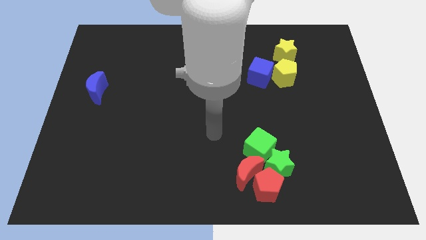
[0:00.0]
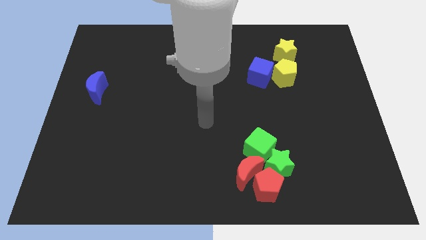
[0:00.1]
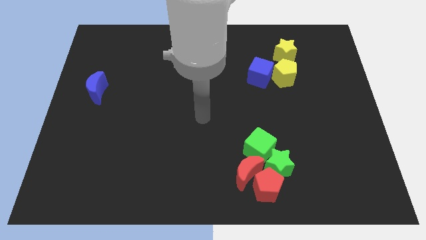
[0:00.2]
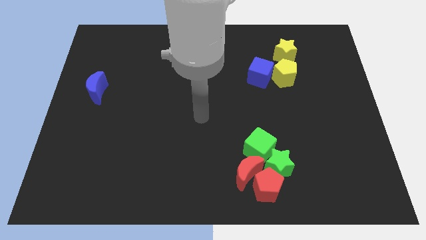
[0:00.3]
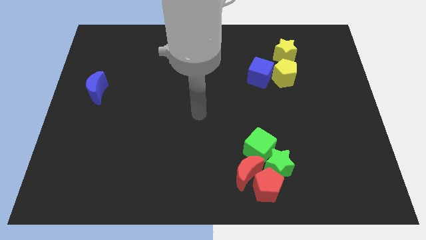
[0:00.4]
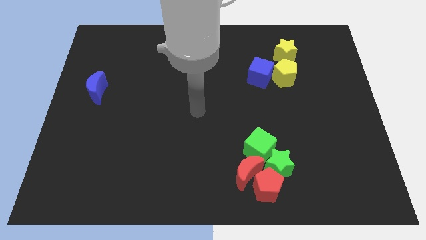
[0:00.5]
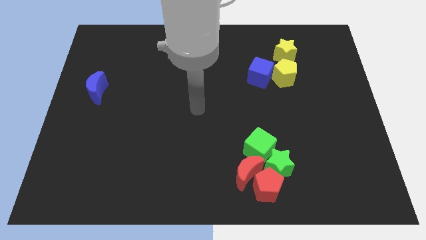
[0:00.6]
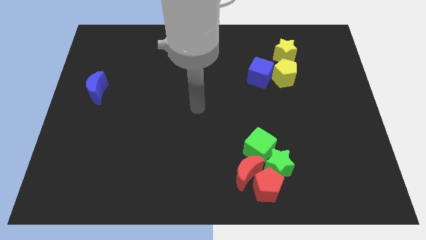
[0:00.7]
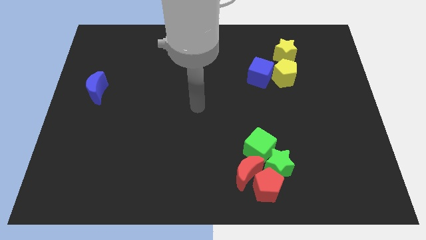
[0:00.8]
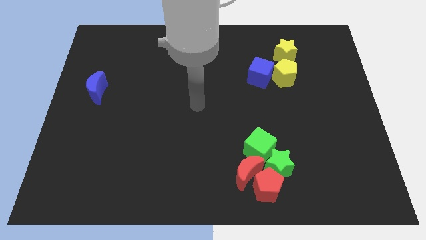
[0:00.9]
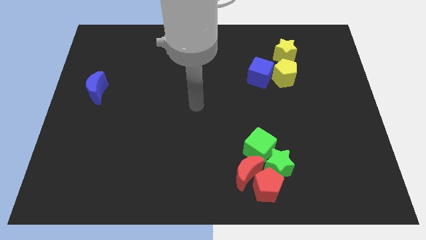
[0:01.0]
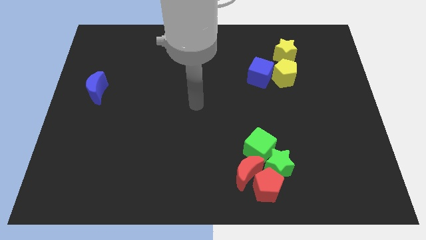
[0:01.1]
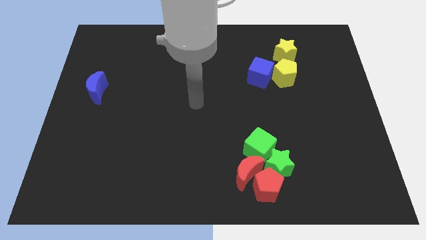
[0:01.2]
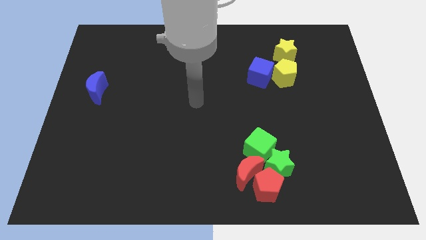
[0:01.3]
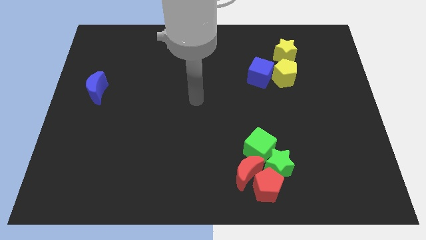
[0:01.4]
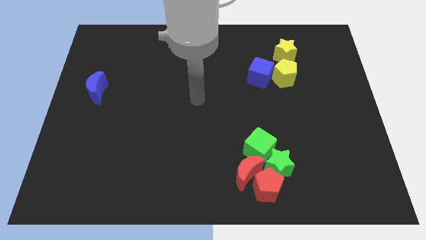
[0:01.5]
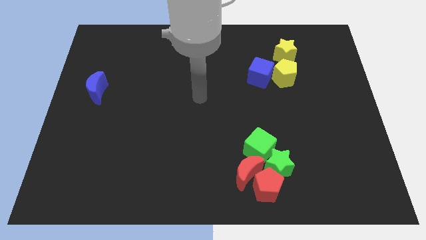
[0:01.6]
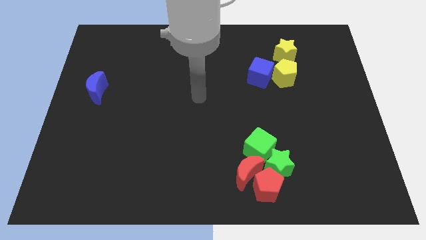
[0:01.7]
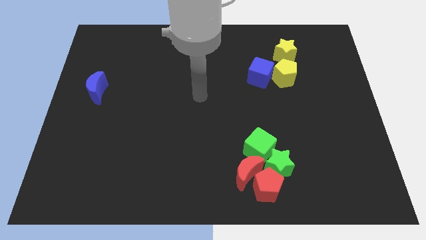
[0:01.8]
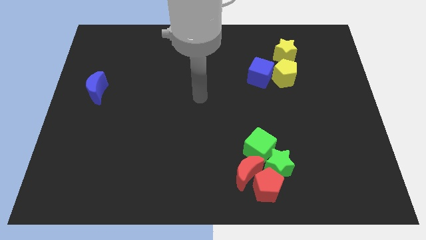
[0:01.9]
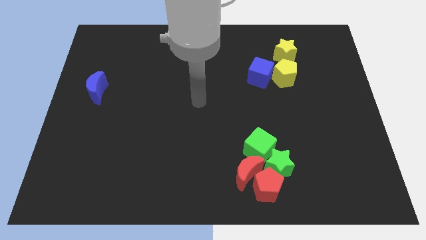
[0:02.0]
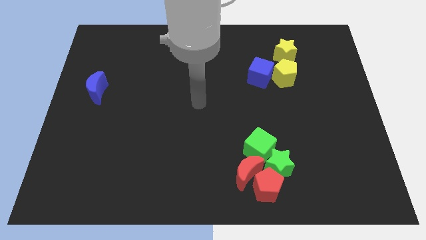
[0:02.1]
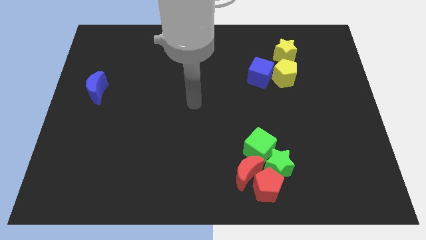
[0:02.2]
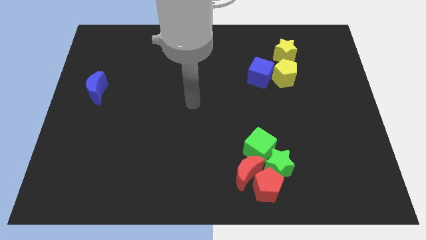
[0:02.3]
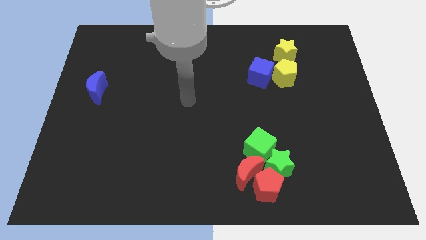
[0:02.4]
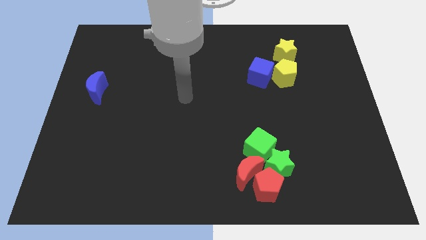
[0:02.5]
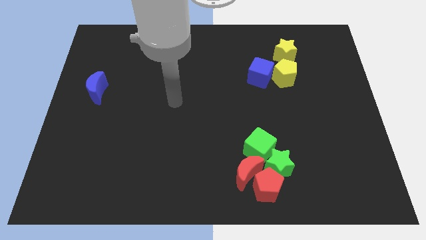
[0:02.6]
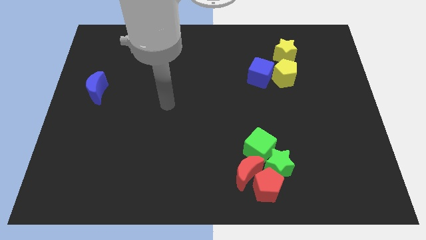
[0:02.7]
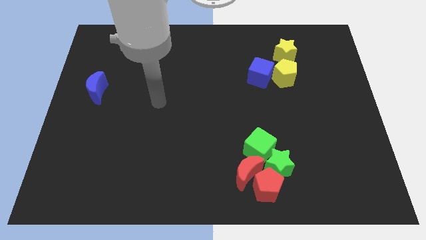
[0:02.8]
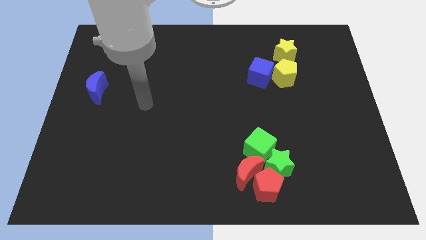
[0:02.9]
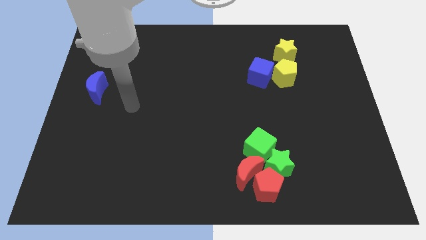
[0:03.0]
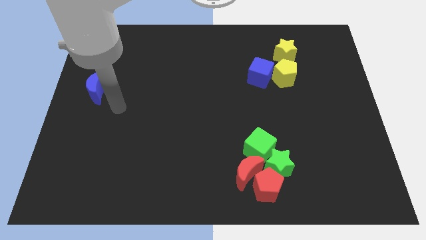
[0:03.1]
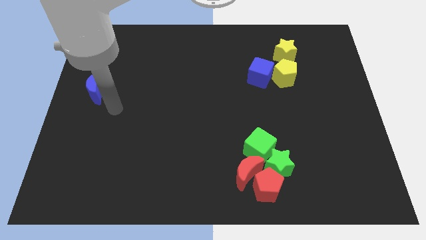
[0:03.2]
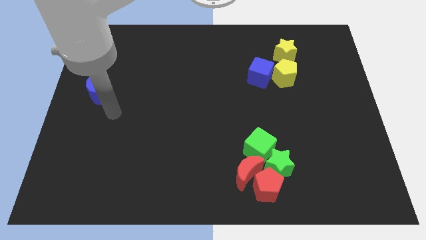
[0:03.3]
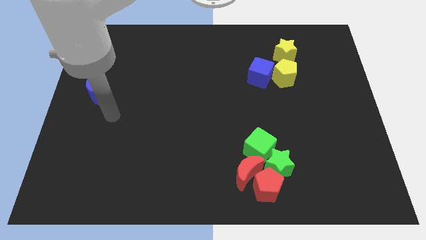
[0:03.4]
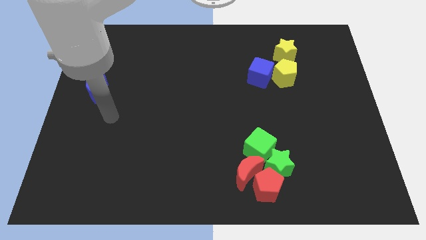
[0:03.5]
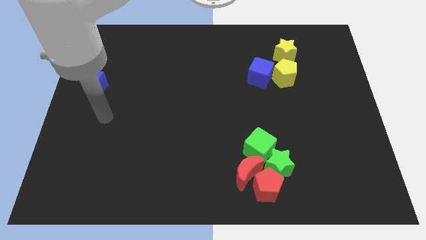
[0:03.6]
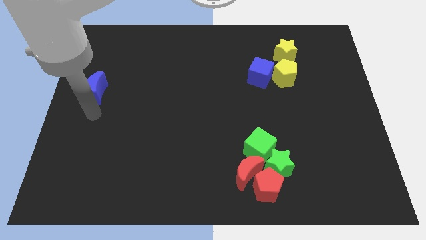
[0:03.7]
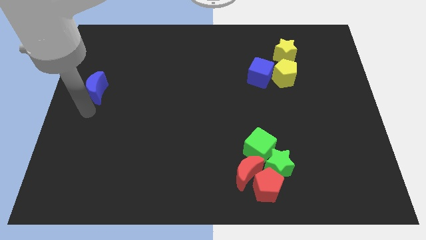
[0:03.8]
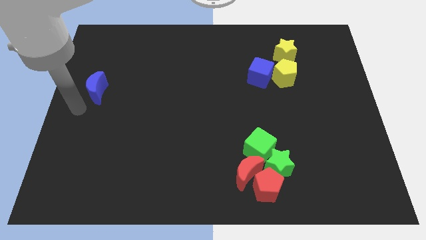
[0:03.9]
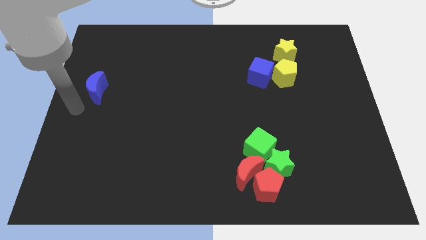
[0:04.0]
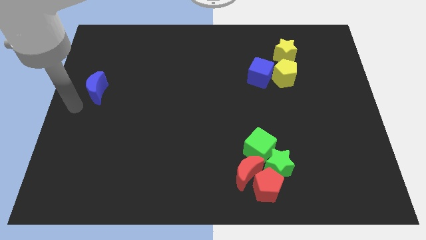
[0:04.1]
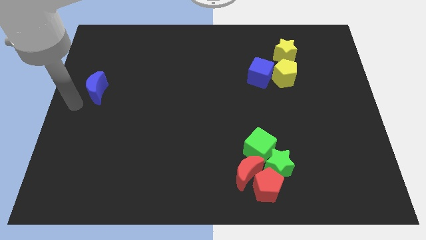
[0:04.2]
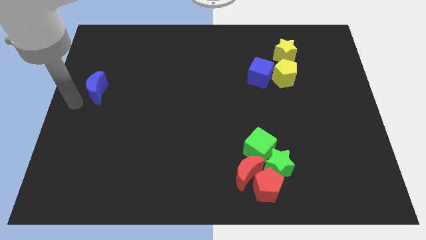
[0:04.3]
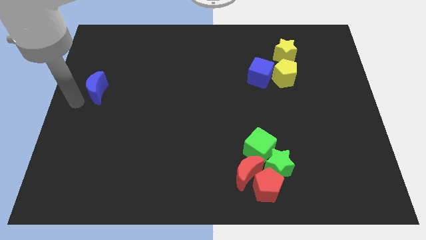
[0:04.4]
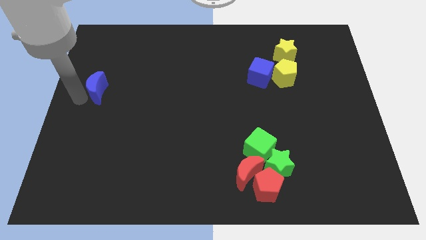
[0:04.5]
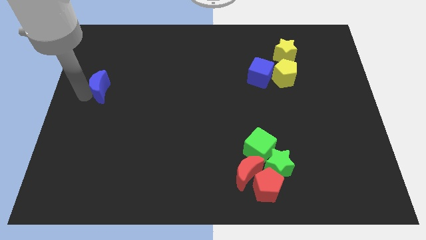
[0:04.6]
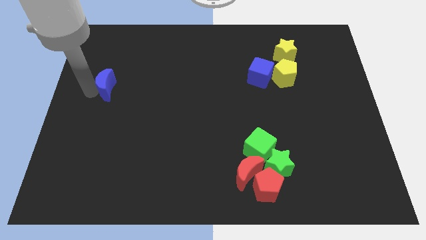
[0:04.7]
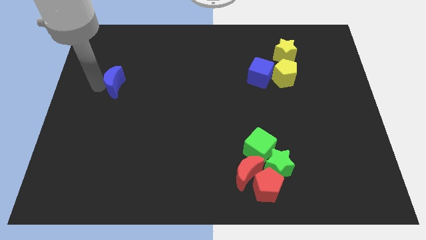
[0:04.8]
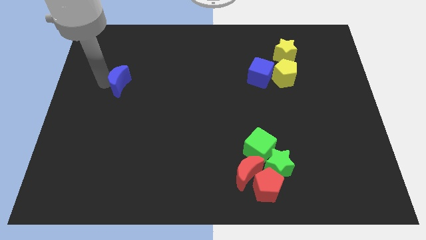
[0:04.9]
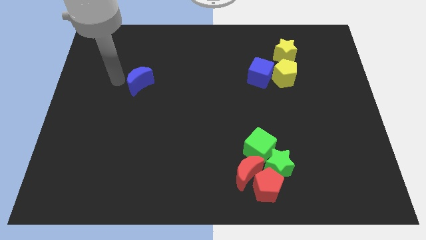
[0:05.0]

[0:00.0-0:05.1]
push the blue crescent slightly to the right of the board

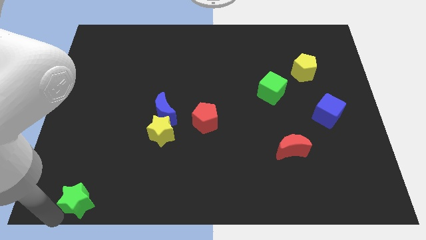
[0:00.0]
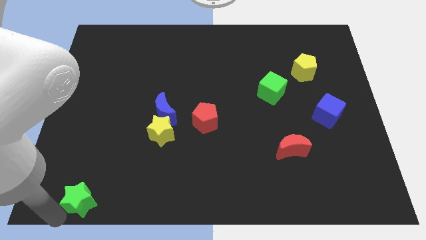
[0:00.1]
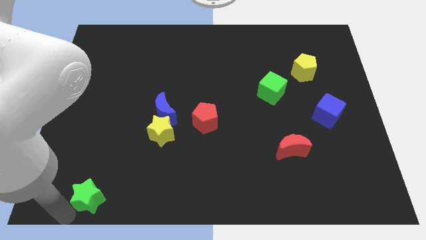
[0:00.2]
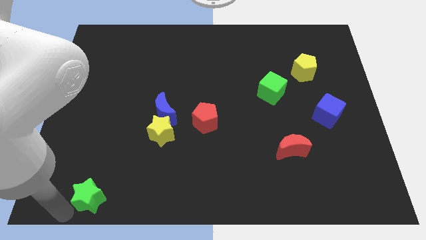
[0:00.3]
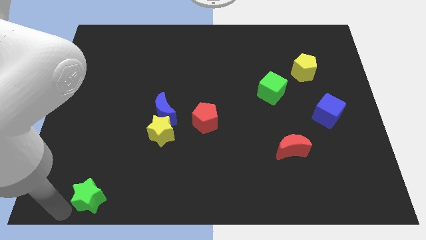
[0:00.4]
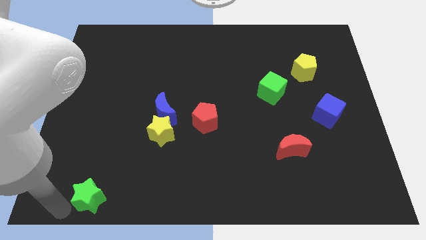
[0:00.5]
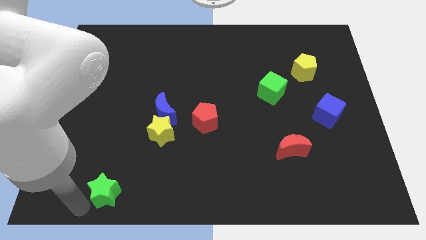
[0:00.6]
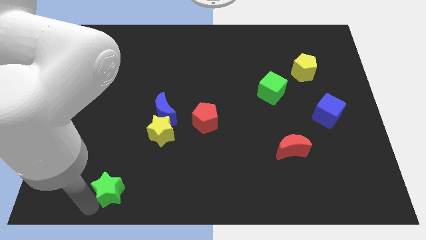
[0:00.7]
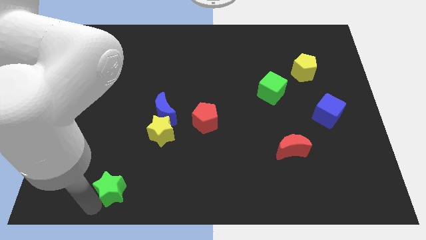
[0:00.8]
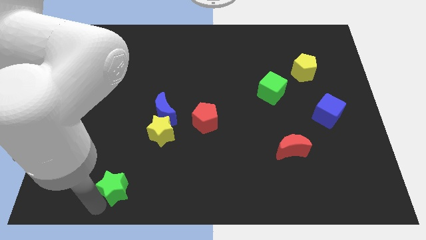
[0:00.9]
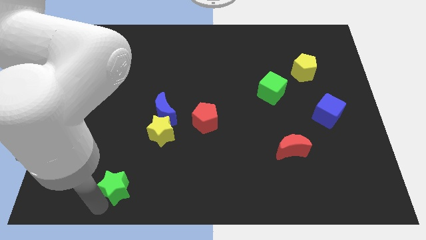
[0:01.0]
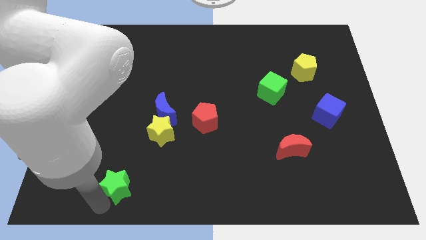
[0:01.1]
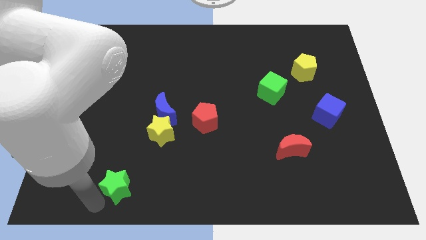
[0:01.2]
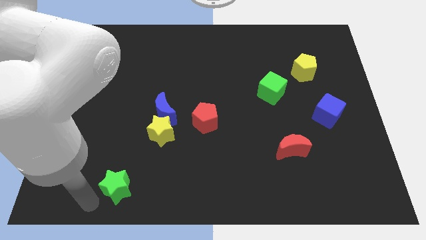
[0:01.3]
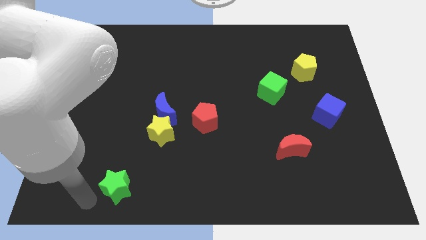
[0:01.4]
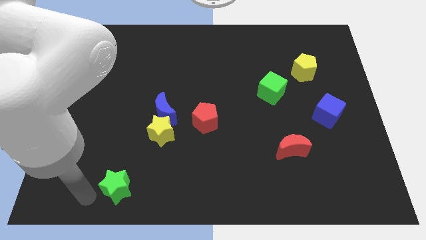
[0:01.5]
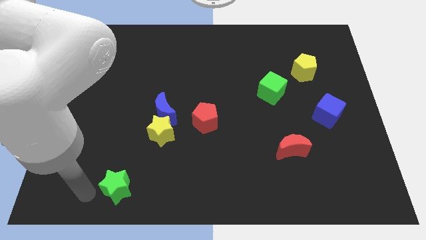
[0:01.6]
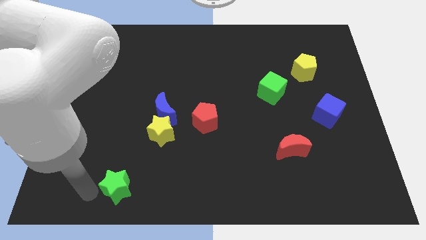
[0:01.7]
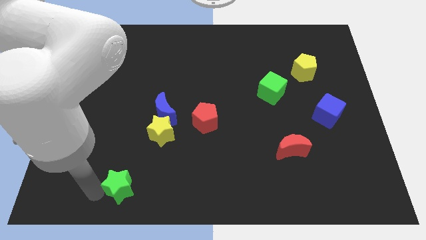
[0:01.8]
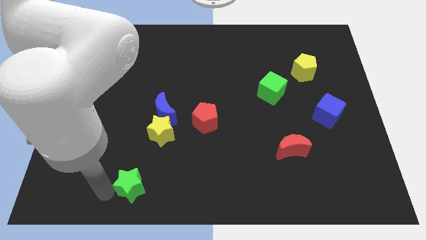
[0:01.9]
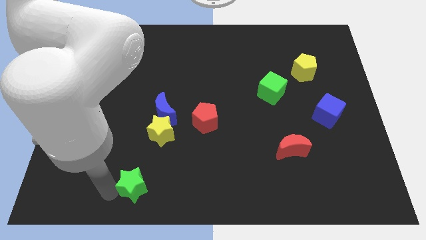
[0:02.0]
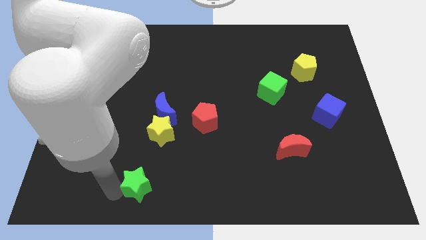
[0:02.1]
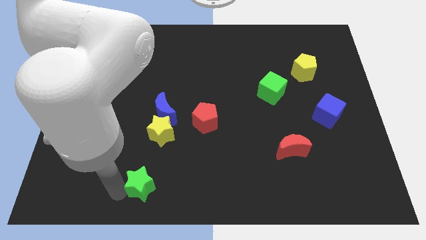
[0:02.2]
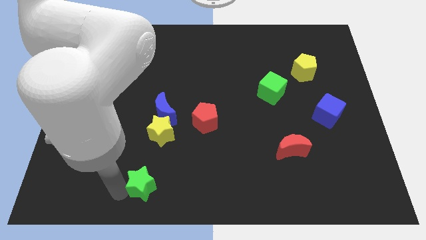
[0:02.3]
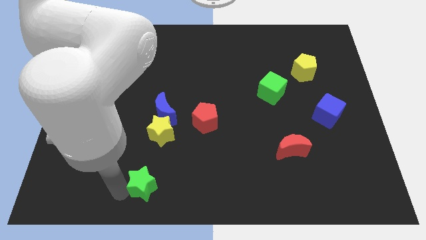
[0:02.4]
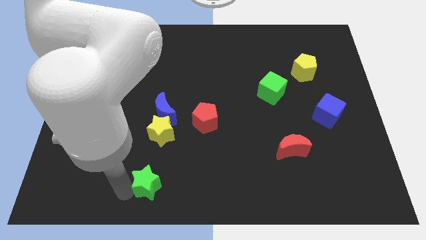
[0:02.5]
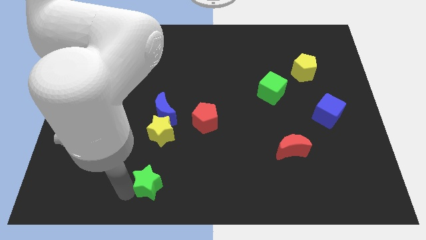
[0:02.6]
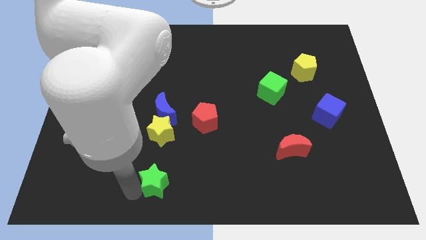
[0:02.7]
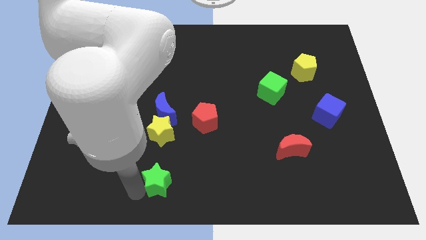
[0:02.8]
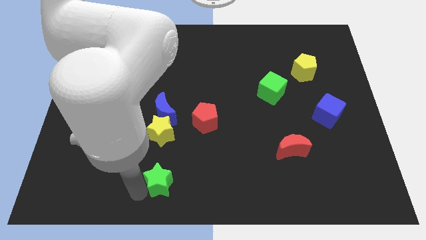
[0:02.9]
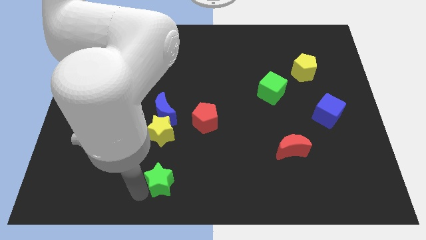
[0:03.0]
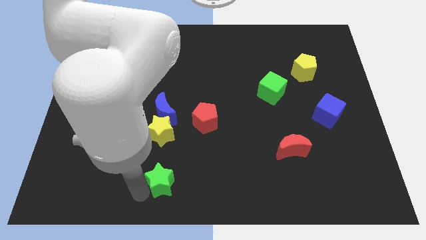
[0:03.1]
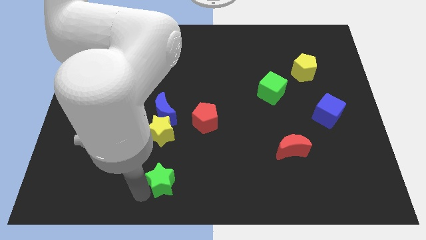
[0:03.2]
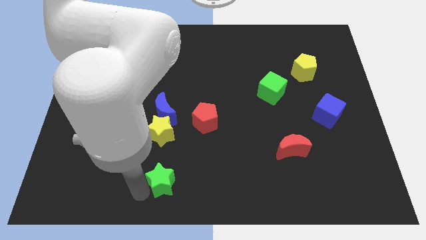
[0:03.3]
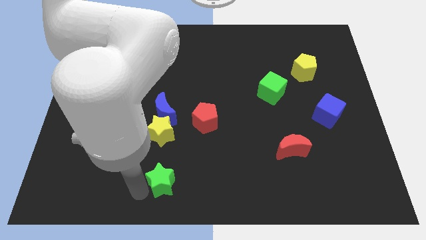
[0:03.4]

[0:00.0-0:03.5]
put the green star below the yellow star

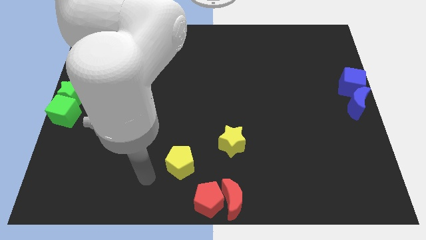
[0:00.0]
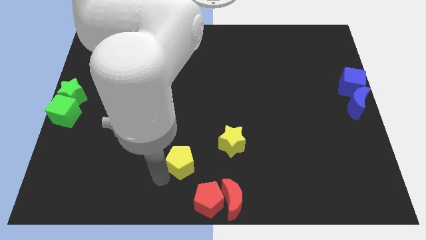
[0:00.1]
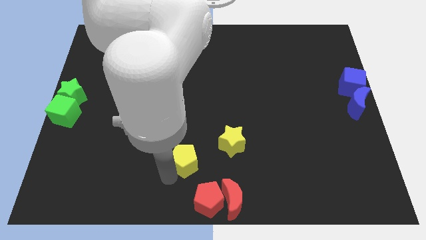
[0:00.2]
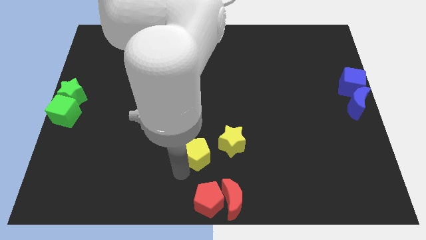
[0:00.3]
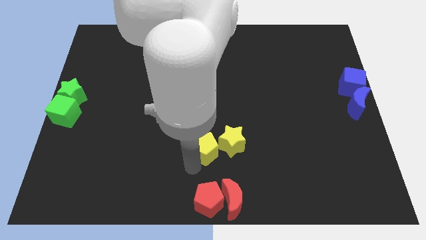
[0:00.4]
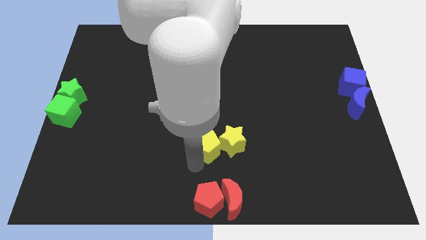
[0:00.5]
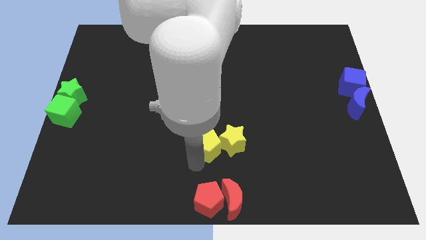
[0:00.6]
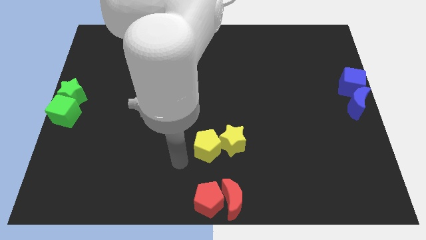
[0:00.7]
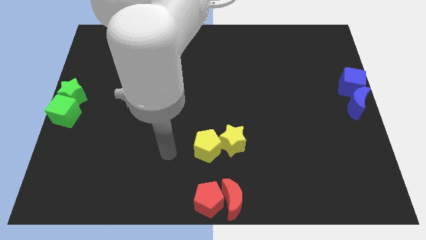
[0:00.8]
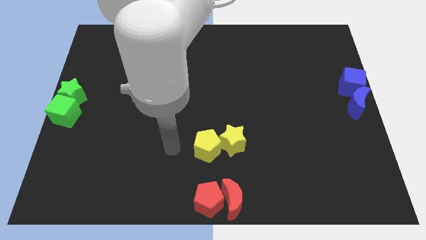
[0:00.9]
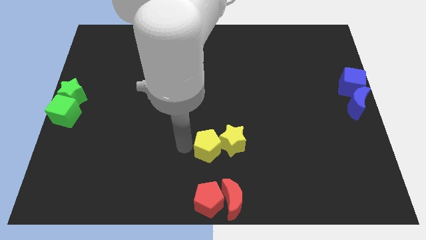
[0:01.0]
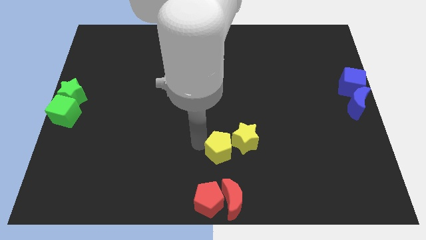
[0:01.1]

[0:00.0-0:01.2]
push the yellow pentagon into the yellow star
